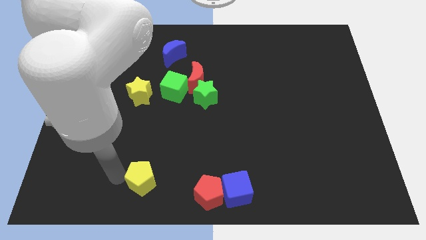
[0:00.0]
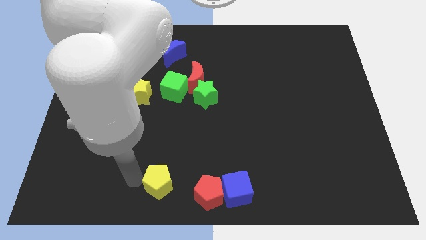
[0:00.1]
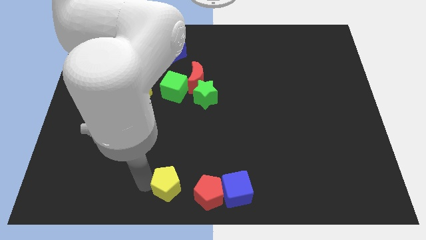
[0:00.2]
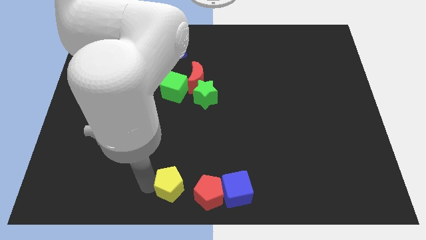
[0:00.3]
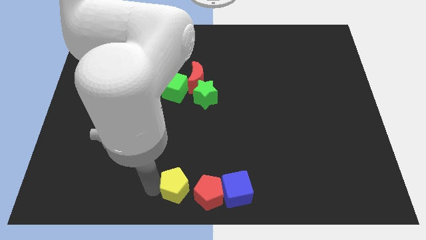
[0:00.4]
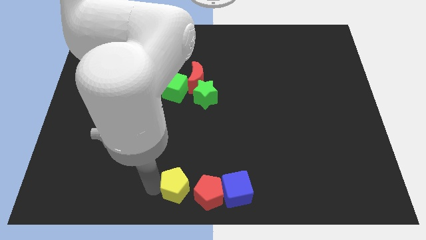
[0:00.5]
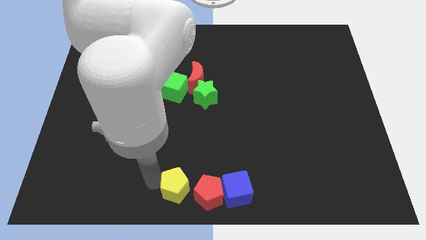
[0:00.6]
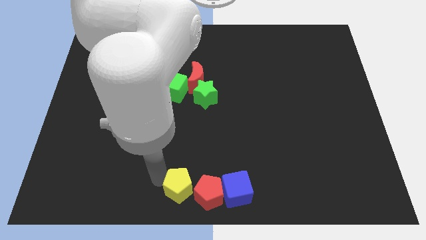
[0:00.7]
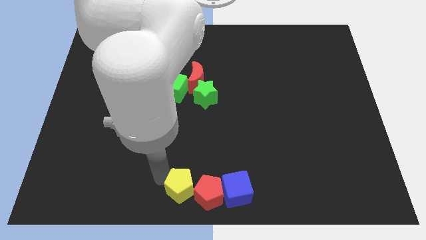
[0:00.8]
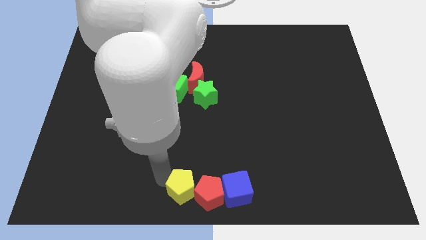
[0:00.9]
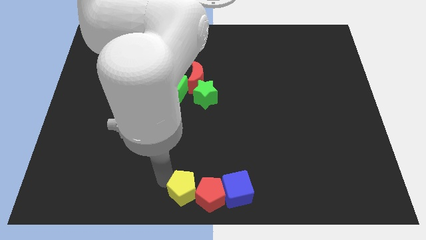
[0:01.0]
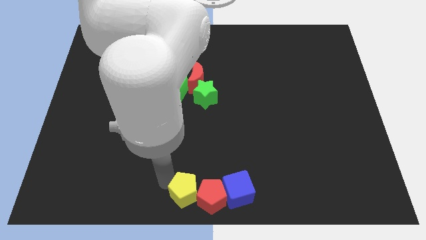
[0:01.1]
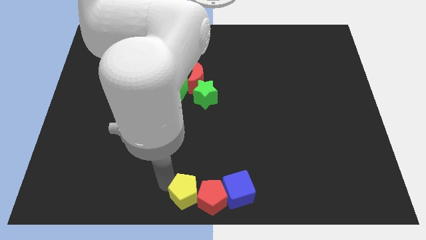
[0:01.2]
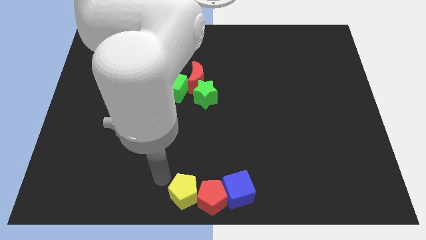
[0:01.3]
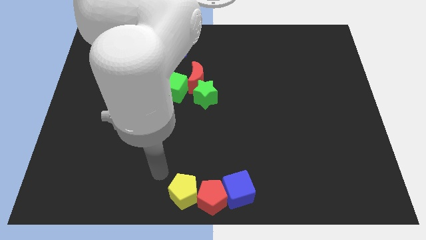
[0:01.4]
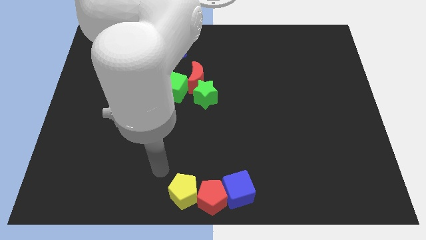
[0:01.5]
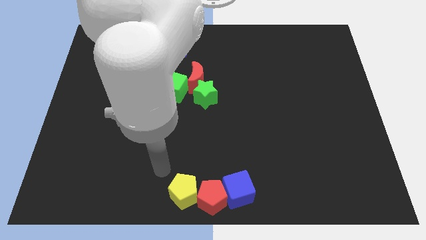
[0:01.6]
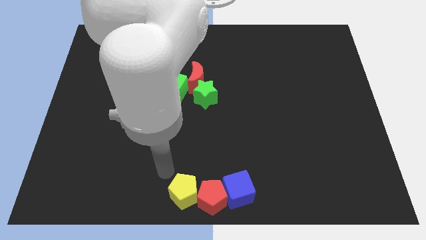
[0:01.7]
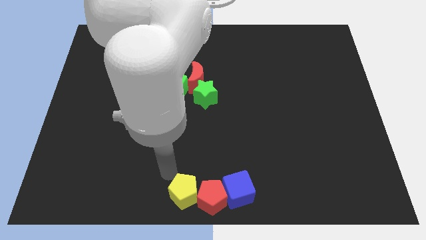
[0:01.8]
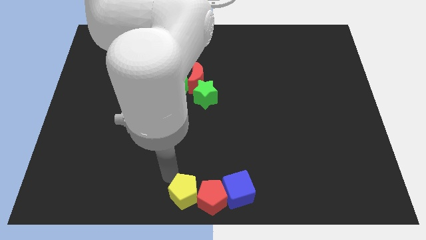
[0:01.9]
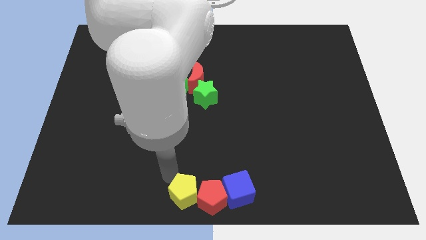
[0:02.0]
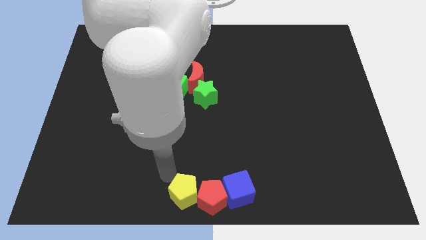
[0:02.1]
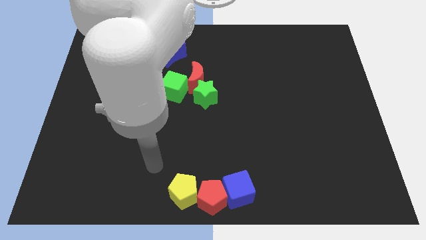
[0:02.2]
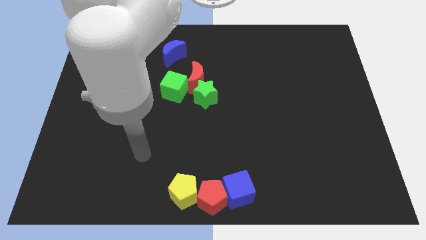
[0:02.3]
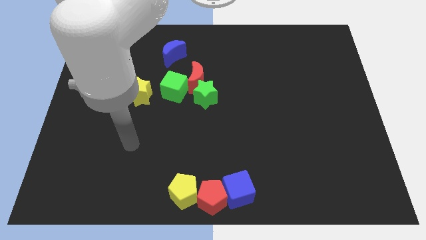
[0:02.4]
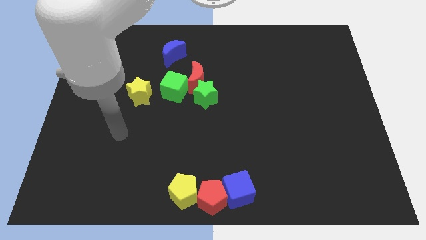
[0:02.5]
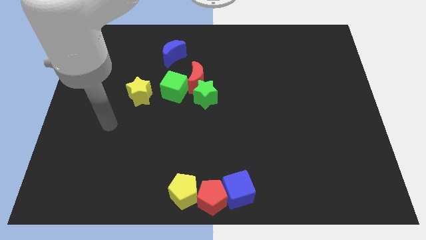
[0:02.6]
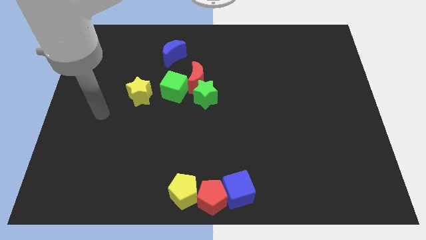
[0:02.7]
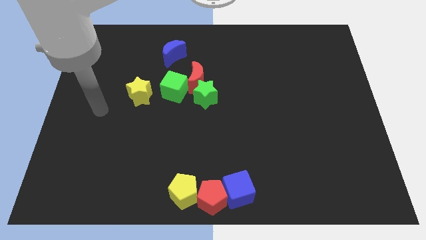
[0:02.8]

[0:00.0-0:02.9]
push the yellow pentagon left to the red pentagon

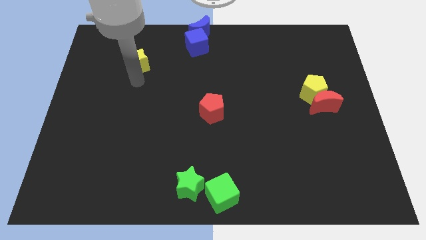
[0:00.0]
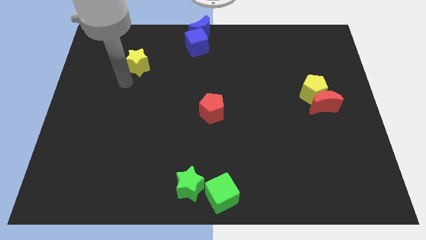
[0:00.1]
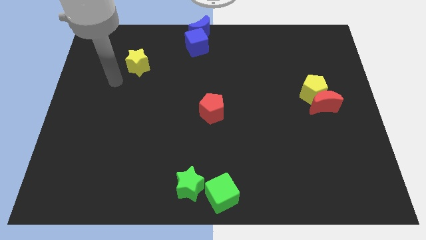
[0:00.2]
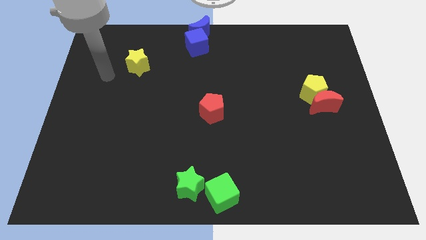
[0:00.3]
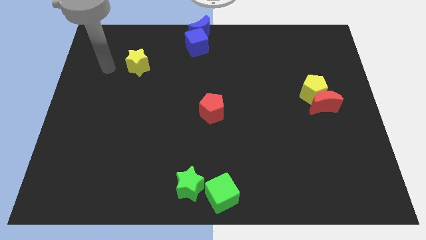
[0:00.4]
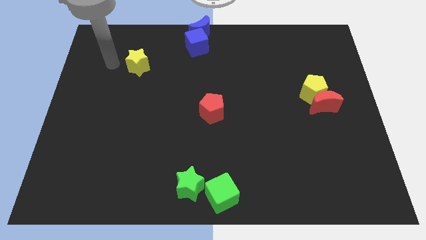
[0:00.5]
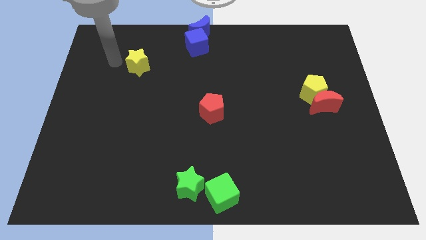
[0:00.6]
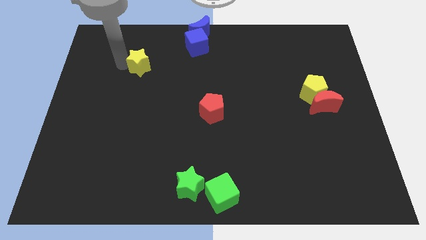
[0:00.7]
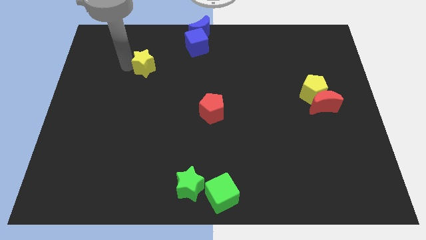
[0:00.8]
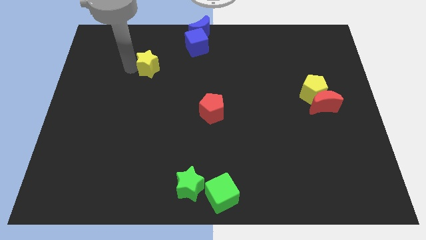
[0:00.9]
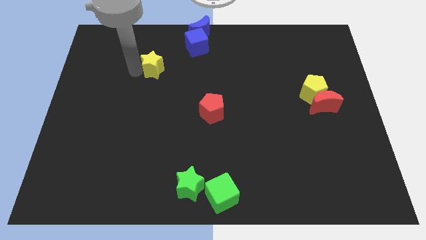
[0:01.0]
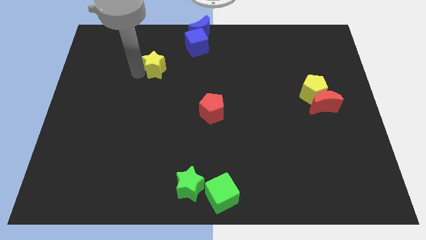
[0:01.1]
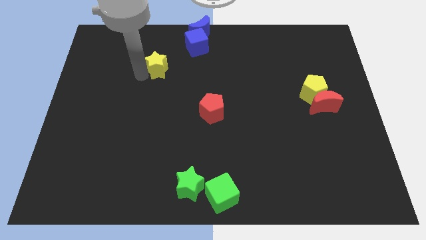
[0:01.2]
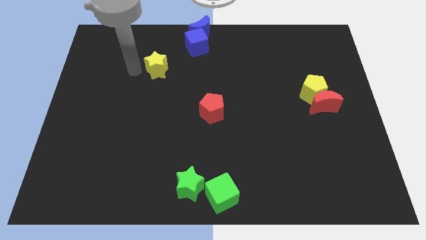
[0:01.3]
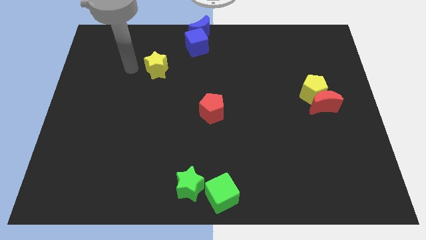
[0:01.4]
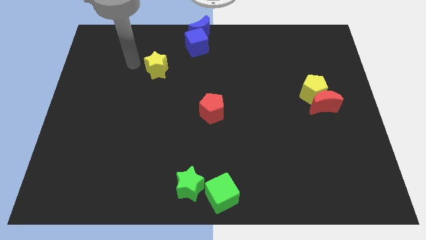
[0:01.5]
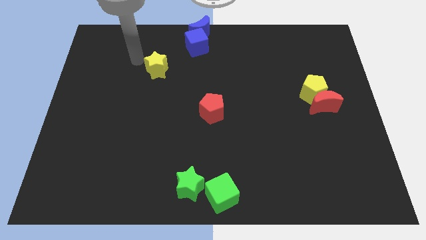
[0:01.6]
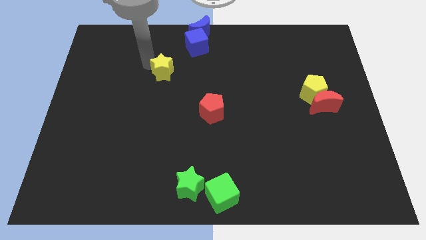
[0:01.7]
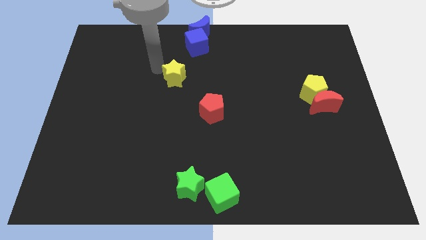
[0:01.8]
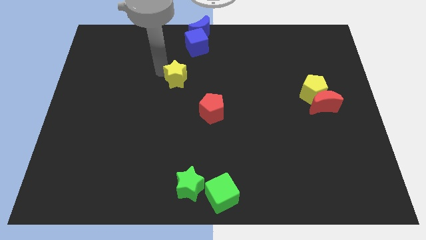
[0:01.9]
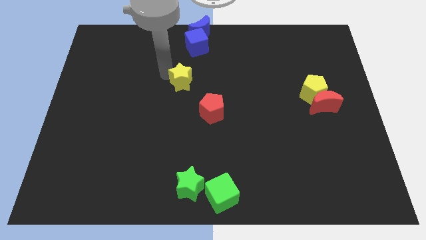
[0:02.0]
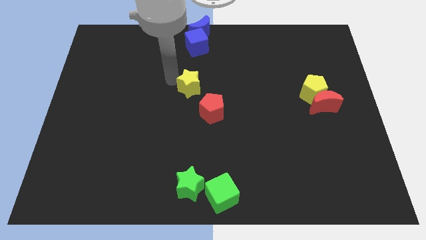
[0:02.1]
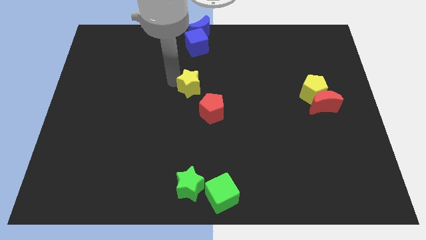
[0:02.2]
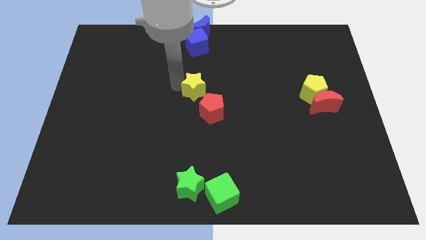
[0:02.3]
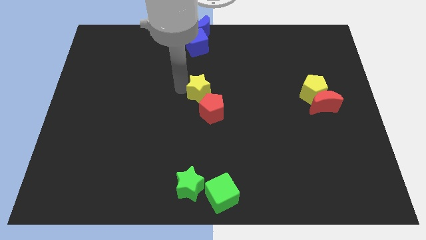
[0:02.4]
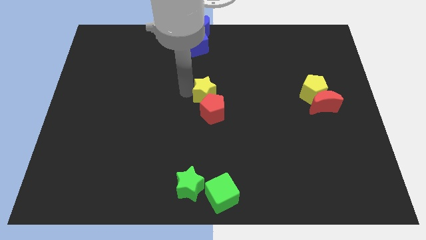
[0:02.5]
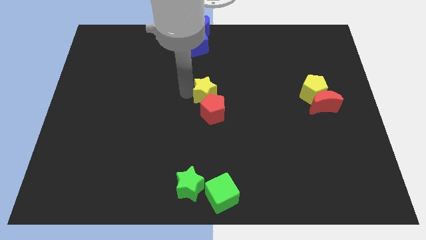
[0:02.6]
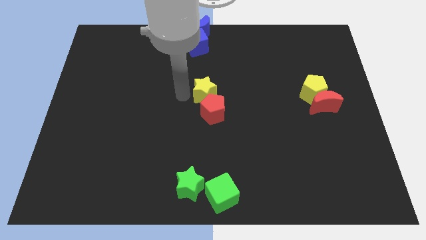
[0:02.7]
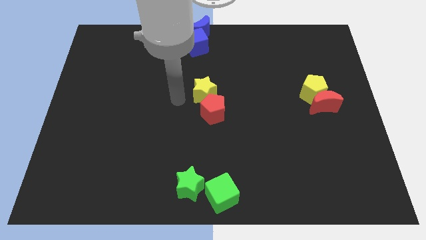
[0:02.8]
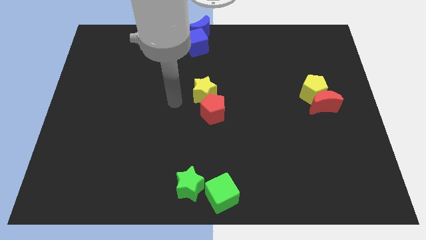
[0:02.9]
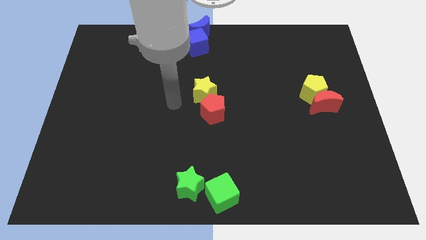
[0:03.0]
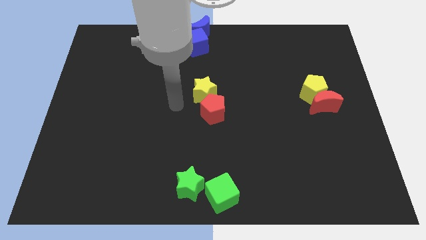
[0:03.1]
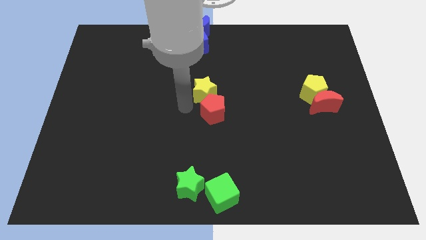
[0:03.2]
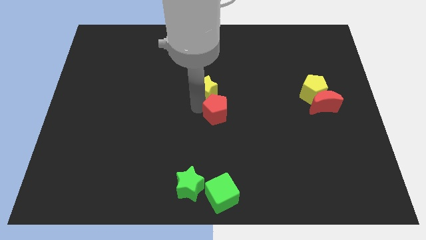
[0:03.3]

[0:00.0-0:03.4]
push the yellow star into the red pentagon

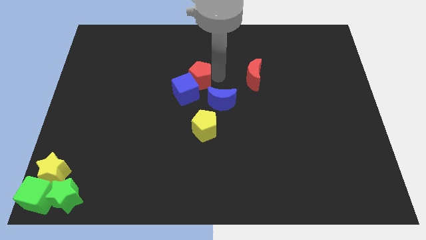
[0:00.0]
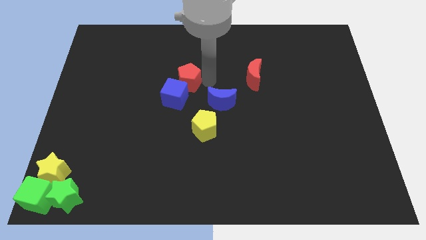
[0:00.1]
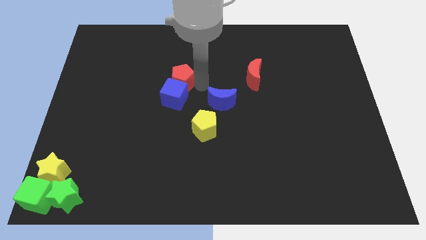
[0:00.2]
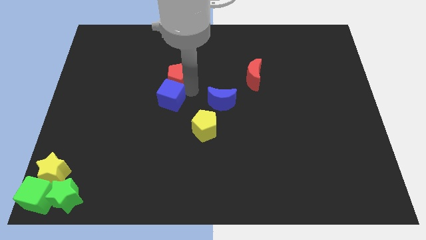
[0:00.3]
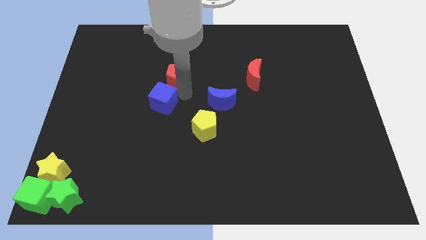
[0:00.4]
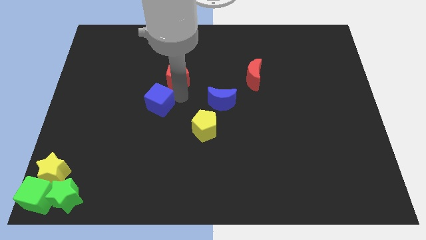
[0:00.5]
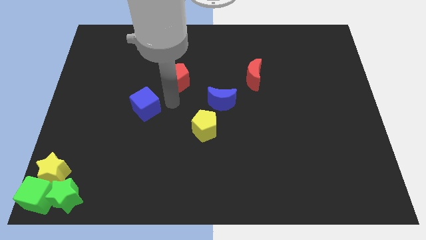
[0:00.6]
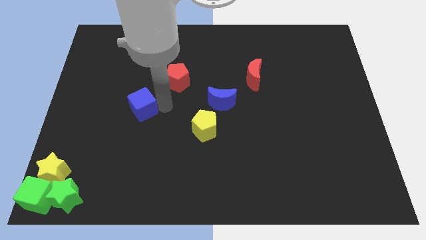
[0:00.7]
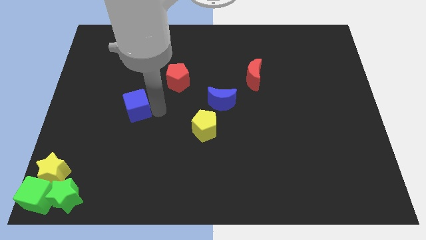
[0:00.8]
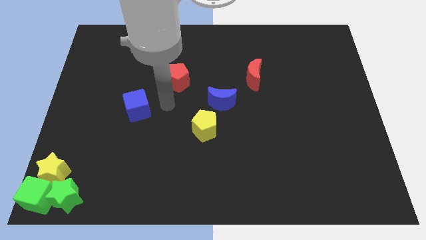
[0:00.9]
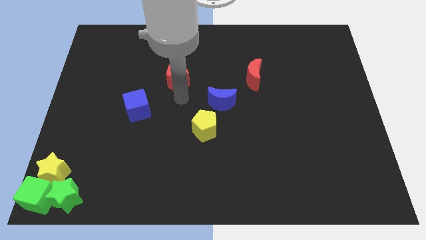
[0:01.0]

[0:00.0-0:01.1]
separate red pentagon and blue cube

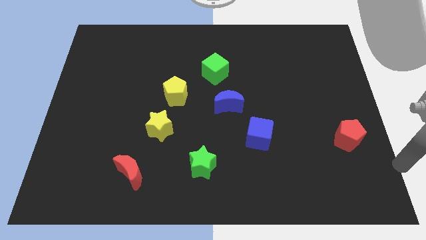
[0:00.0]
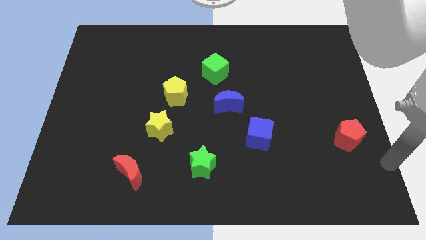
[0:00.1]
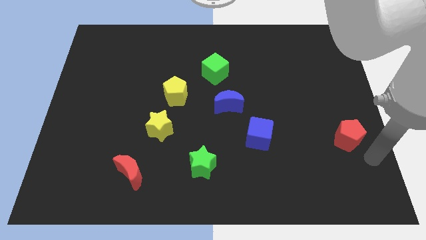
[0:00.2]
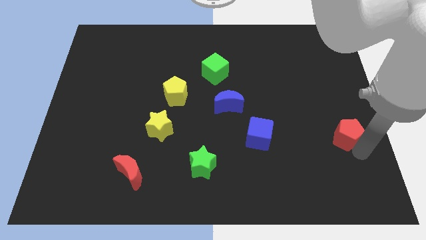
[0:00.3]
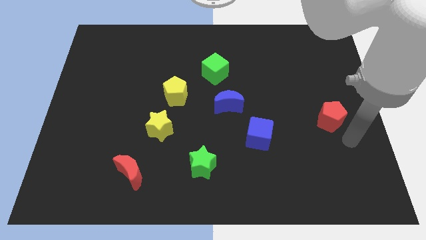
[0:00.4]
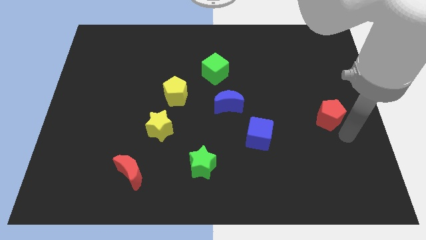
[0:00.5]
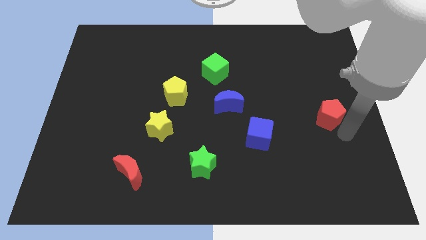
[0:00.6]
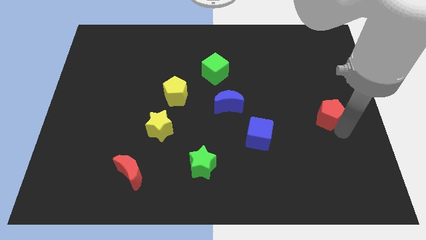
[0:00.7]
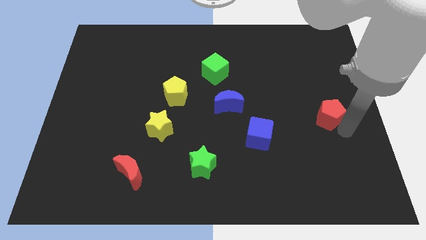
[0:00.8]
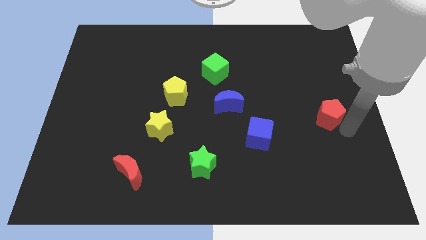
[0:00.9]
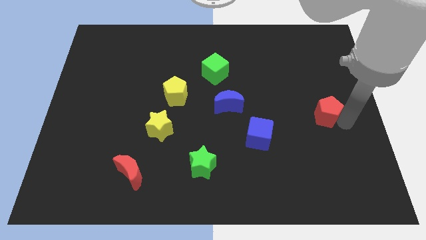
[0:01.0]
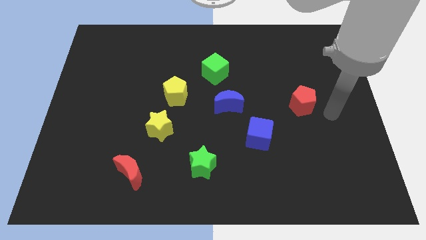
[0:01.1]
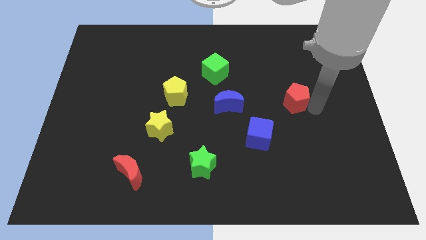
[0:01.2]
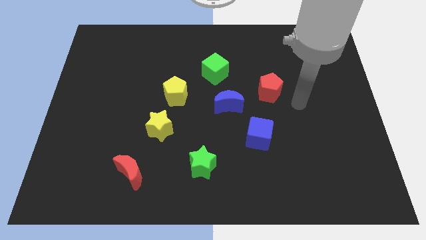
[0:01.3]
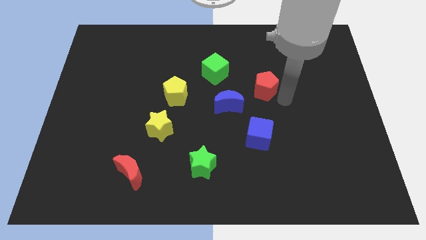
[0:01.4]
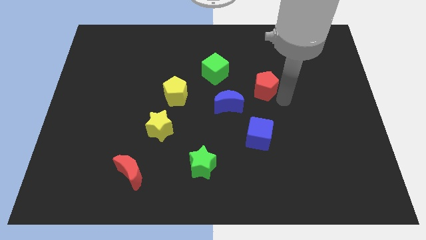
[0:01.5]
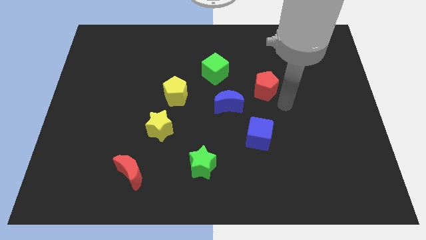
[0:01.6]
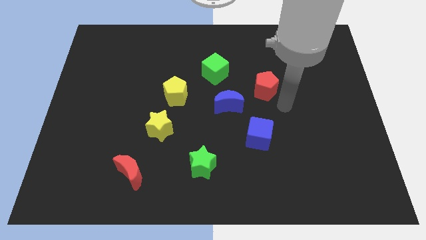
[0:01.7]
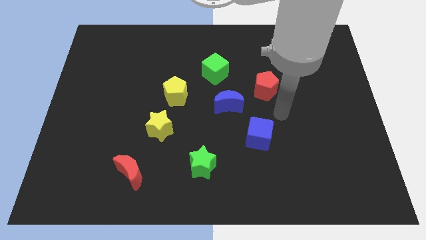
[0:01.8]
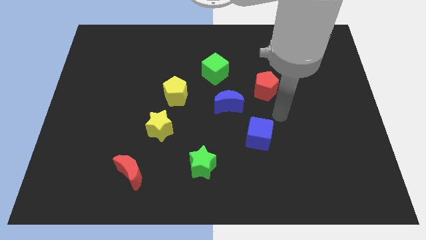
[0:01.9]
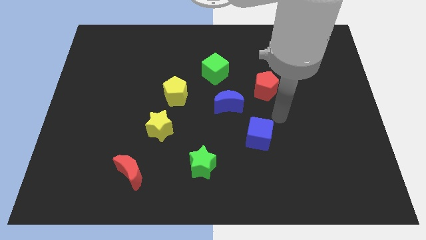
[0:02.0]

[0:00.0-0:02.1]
push the red pentagon towards the green cube
